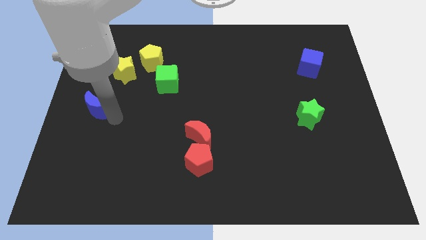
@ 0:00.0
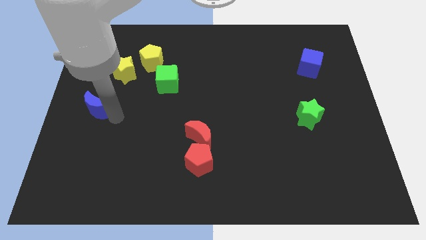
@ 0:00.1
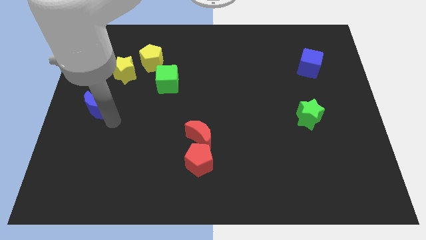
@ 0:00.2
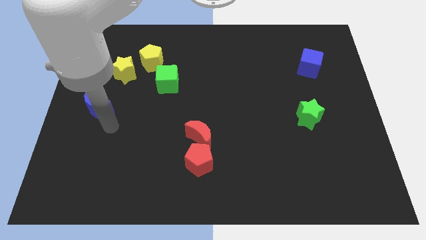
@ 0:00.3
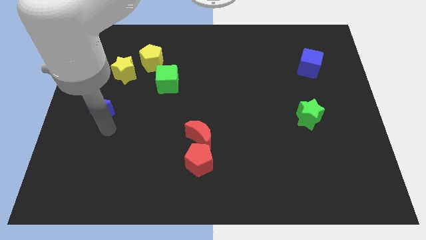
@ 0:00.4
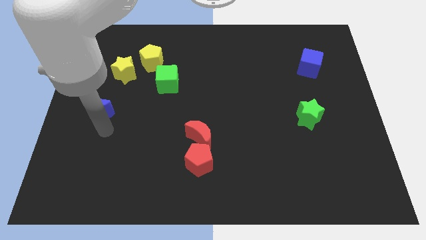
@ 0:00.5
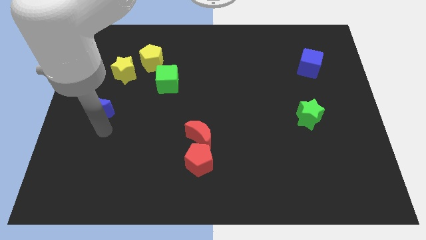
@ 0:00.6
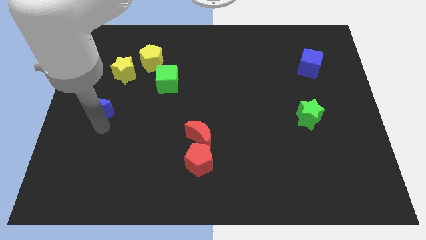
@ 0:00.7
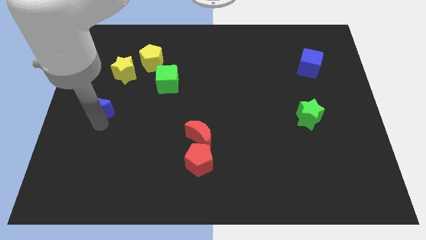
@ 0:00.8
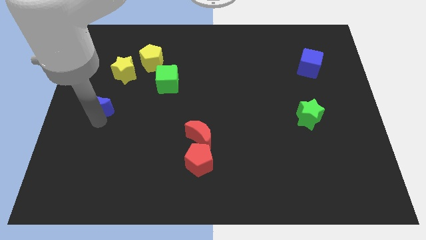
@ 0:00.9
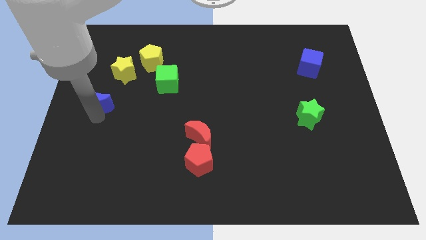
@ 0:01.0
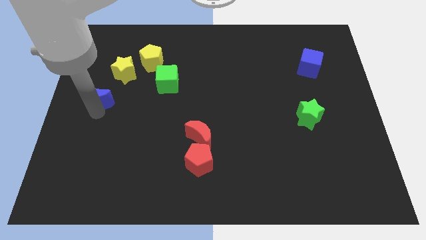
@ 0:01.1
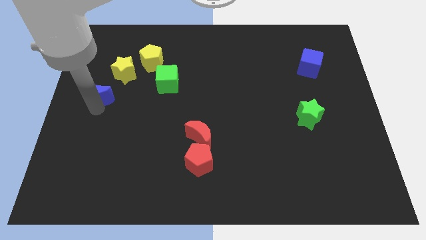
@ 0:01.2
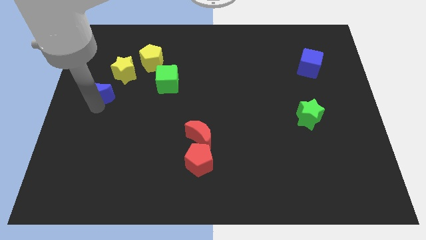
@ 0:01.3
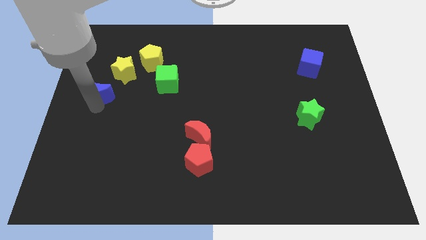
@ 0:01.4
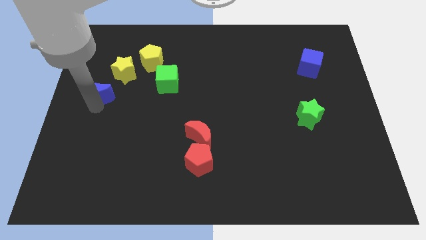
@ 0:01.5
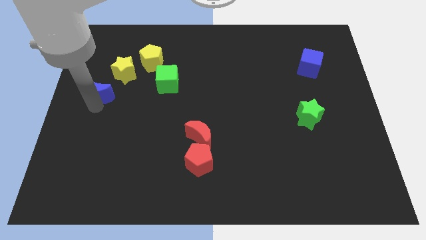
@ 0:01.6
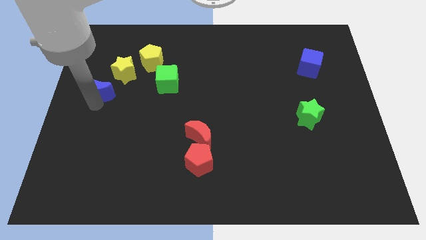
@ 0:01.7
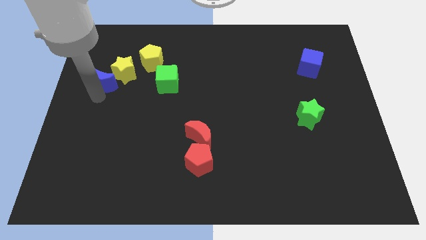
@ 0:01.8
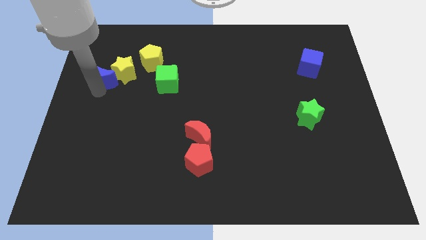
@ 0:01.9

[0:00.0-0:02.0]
place the blue moon to the bottom left of the yellow star

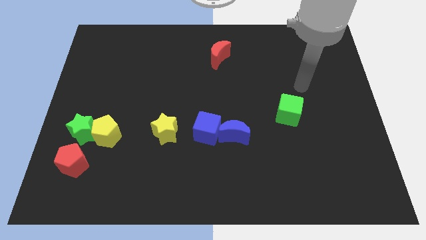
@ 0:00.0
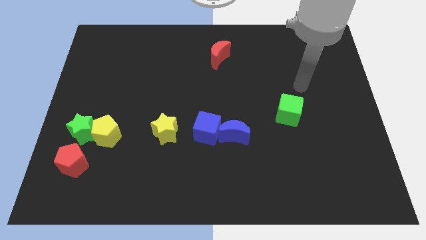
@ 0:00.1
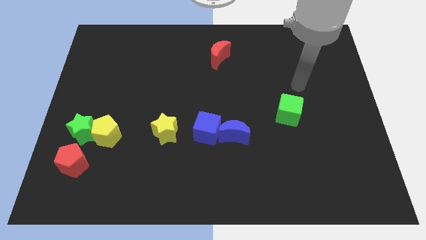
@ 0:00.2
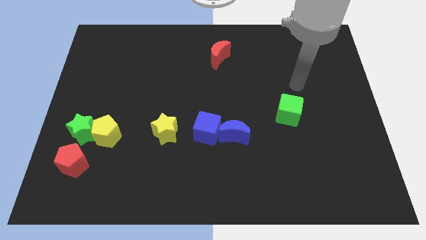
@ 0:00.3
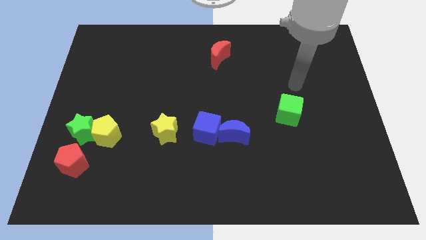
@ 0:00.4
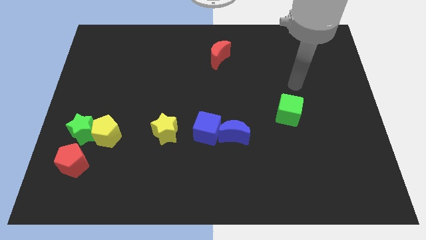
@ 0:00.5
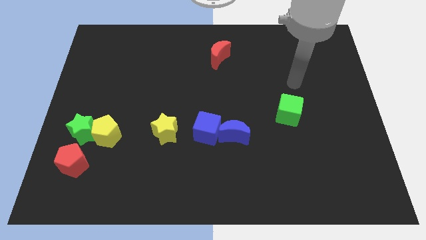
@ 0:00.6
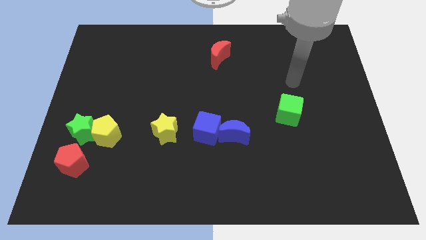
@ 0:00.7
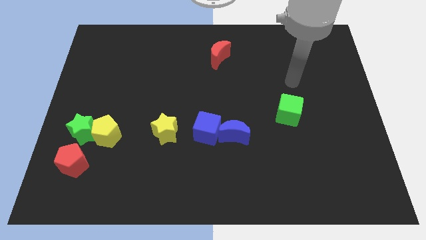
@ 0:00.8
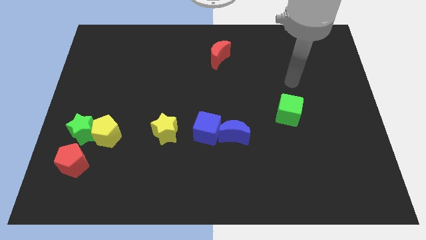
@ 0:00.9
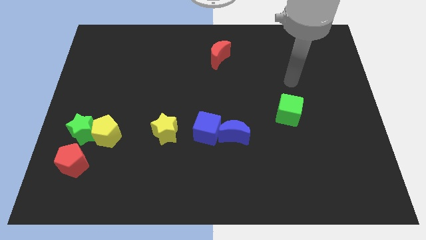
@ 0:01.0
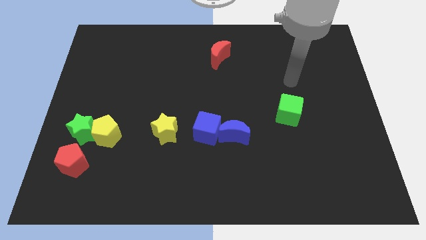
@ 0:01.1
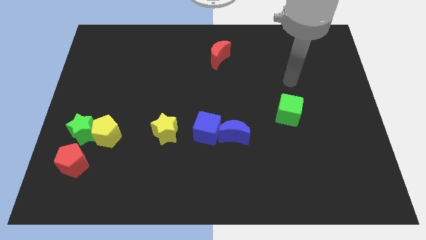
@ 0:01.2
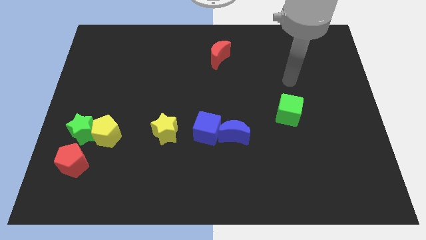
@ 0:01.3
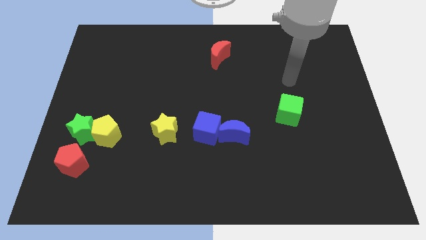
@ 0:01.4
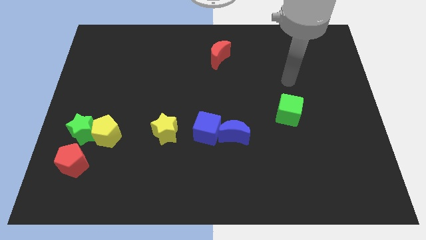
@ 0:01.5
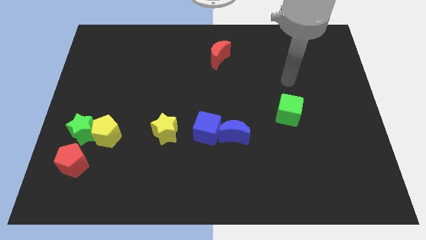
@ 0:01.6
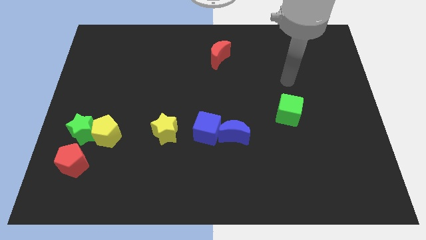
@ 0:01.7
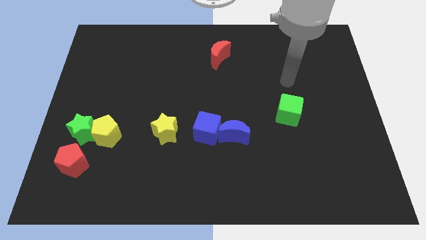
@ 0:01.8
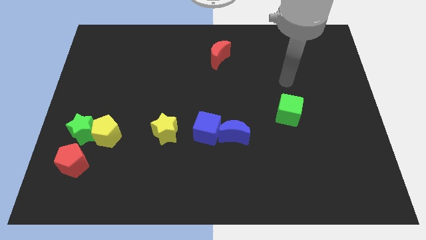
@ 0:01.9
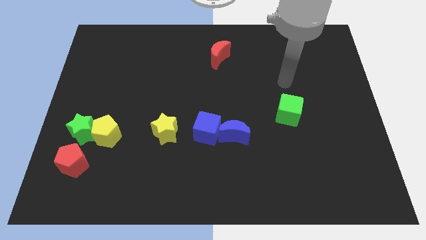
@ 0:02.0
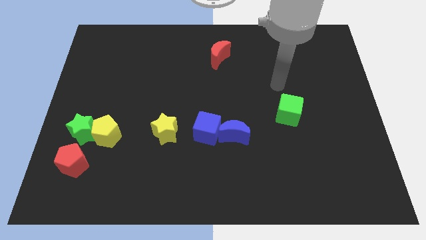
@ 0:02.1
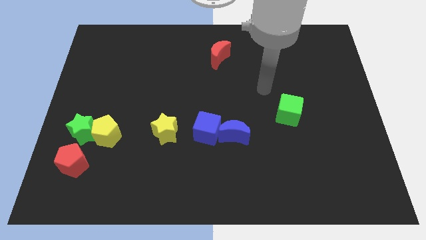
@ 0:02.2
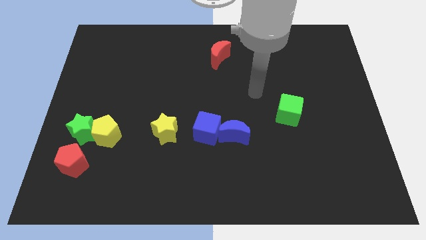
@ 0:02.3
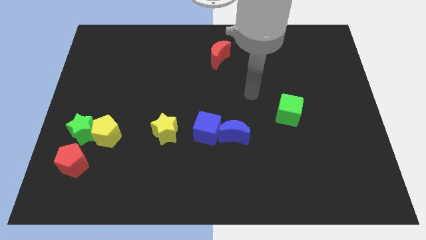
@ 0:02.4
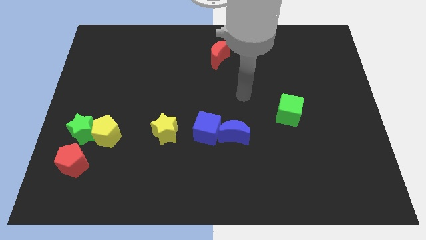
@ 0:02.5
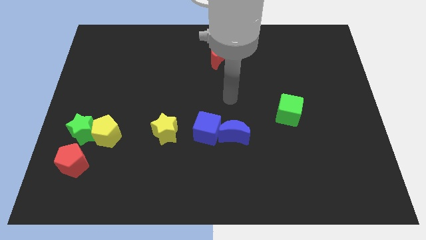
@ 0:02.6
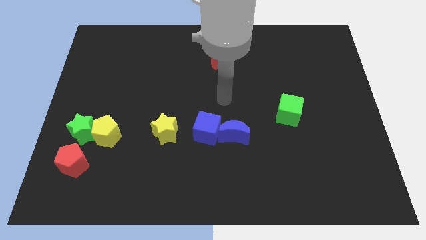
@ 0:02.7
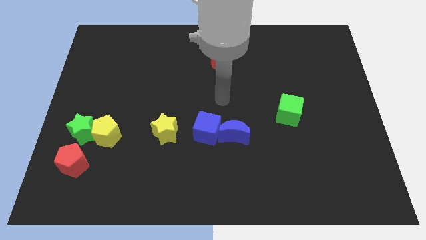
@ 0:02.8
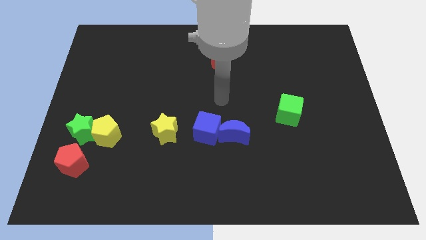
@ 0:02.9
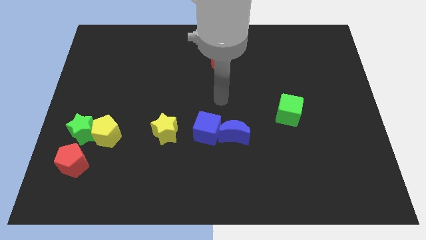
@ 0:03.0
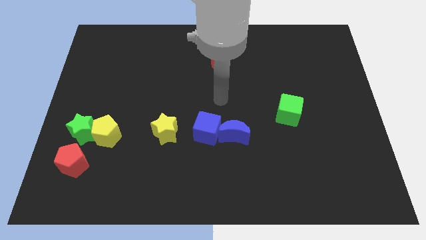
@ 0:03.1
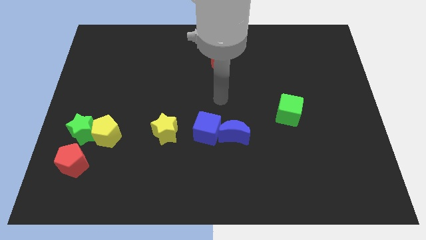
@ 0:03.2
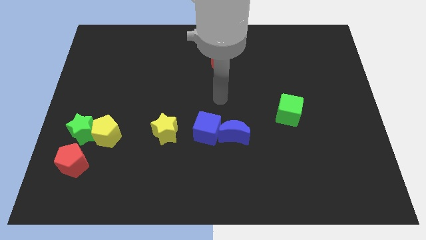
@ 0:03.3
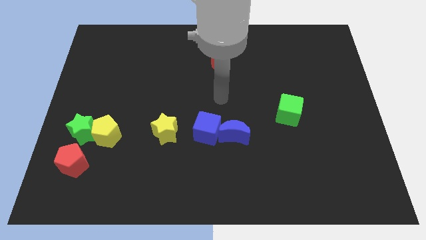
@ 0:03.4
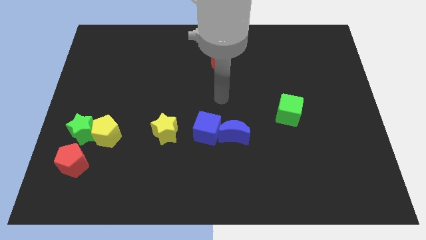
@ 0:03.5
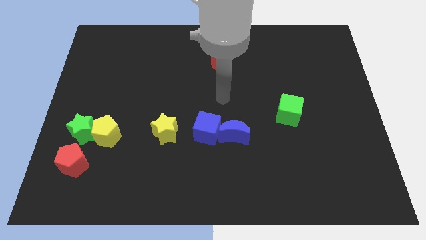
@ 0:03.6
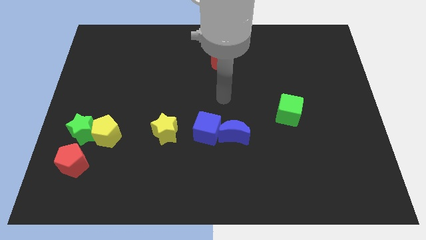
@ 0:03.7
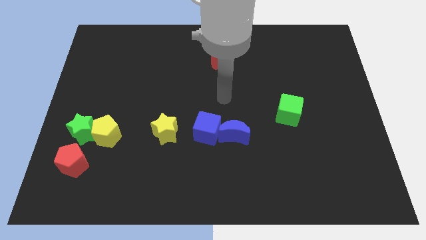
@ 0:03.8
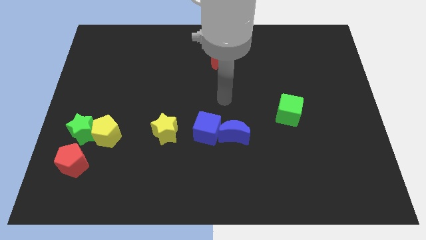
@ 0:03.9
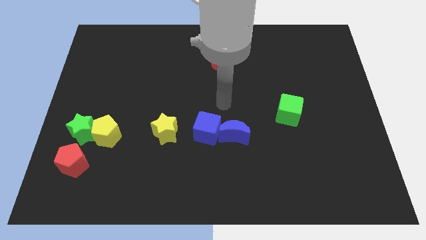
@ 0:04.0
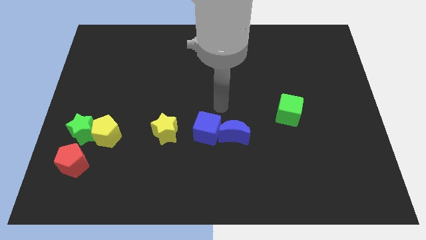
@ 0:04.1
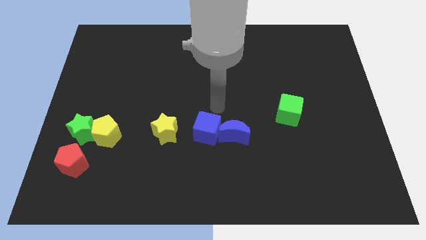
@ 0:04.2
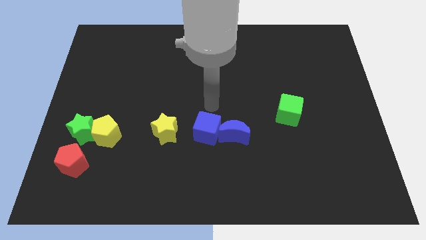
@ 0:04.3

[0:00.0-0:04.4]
move your arm to the top of the blue cube

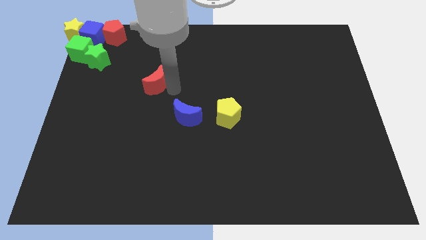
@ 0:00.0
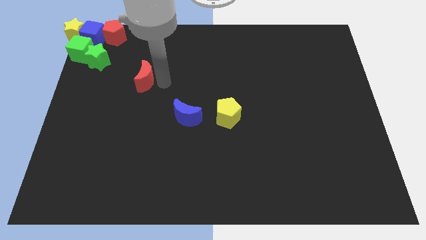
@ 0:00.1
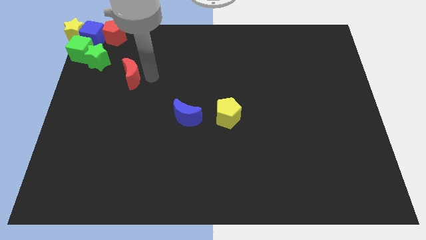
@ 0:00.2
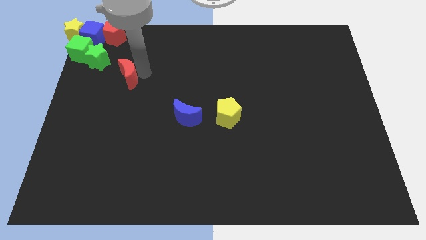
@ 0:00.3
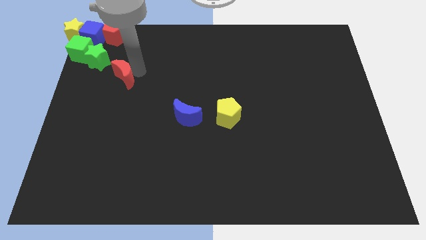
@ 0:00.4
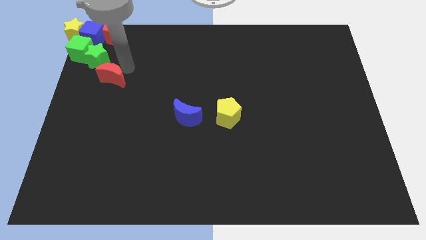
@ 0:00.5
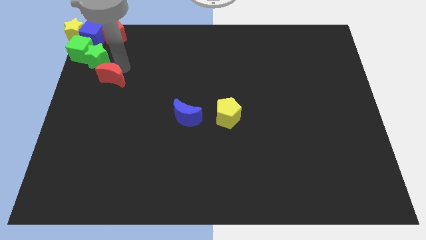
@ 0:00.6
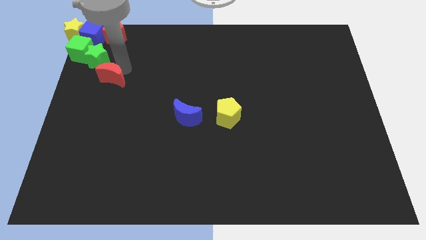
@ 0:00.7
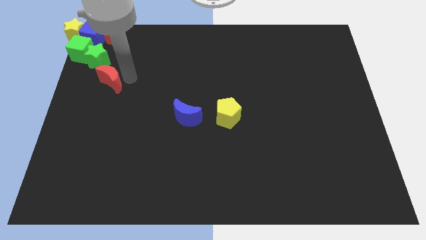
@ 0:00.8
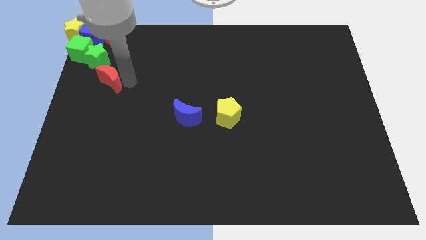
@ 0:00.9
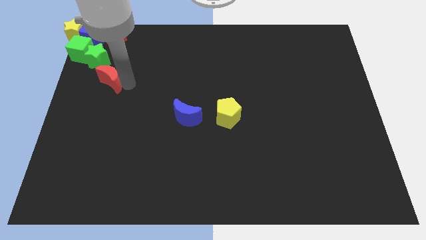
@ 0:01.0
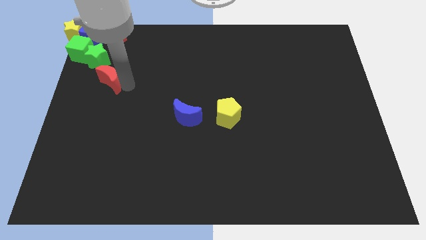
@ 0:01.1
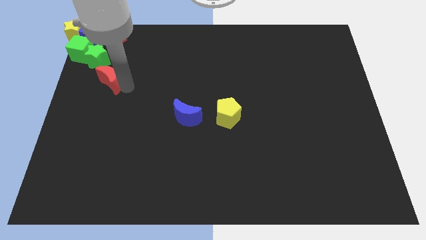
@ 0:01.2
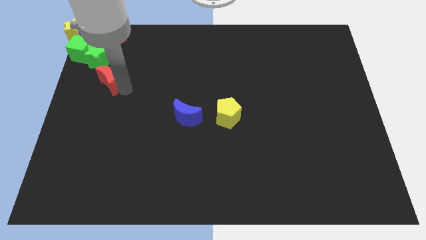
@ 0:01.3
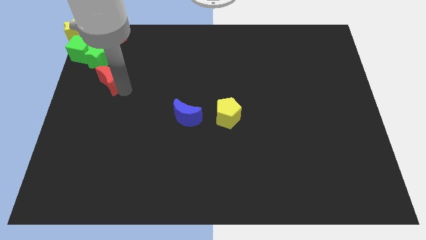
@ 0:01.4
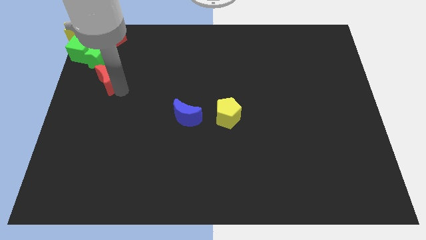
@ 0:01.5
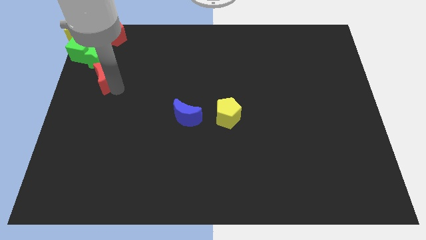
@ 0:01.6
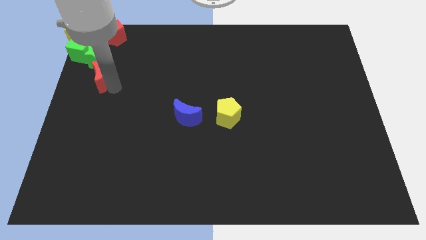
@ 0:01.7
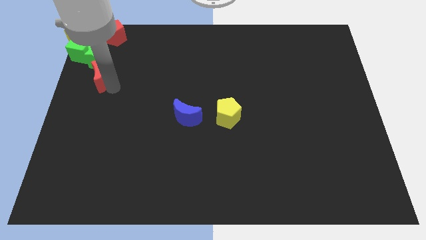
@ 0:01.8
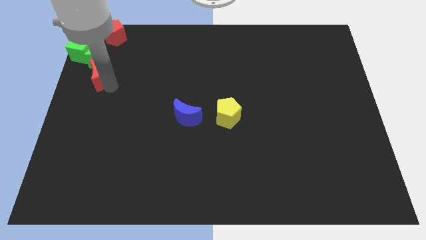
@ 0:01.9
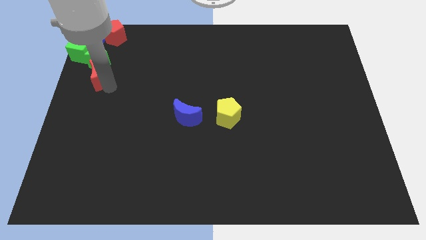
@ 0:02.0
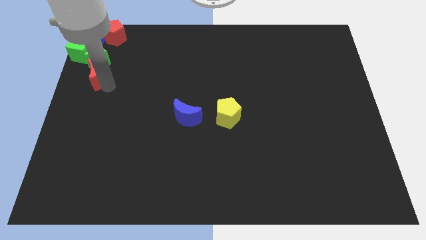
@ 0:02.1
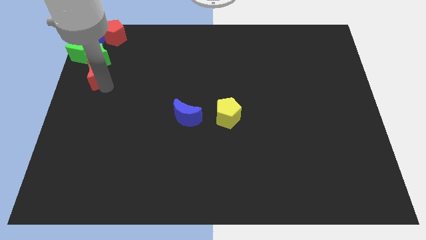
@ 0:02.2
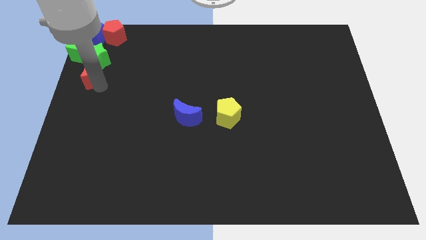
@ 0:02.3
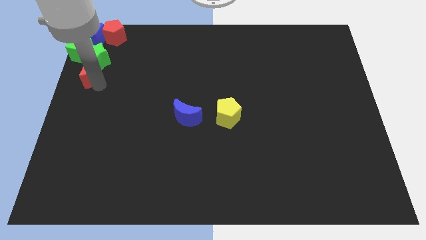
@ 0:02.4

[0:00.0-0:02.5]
place the red crescent below the green star
